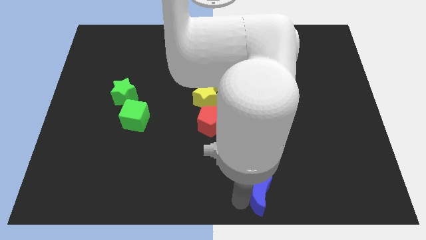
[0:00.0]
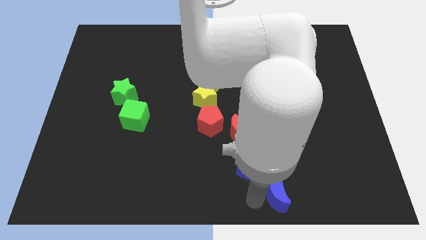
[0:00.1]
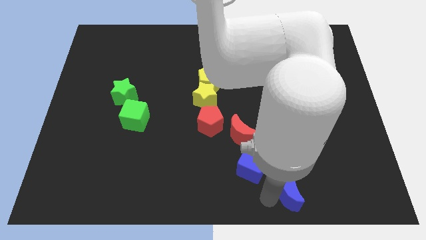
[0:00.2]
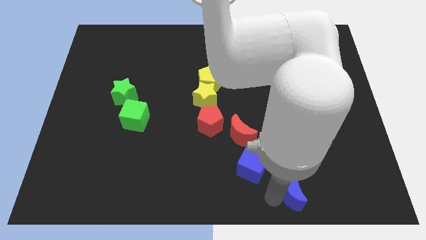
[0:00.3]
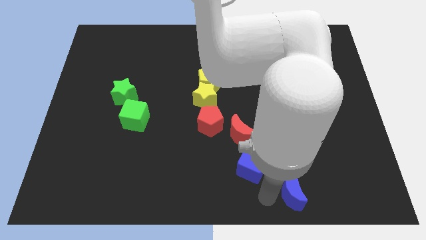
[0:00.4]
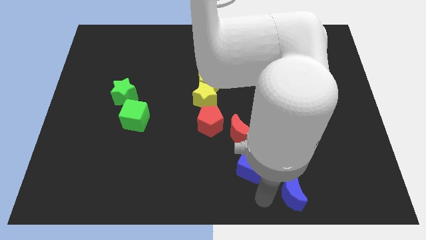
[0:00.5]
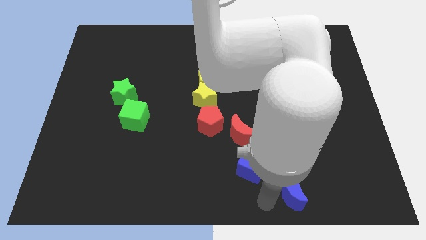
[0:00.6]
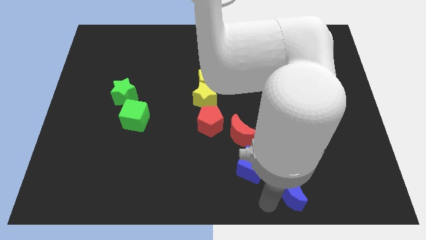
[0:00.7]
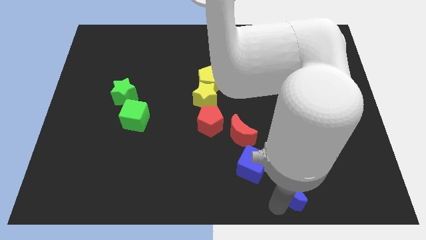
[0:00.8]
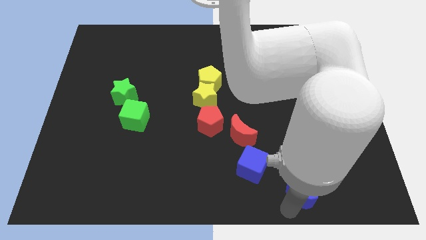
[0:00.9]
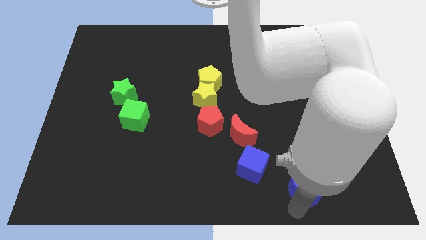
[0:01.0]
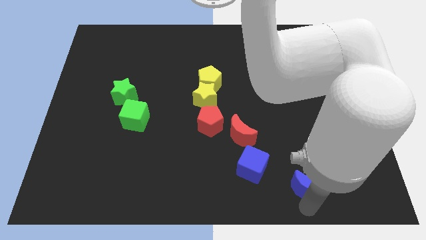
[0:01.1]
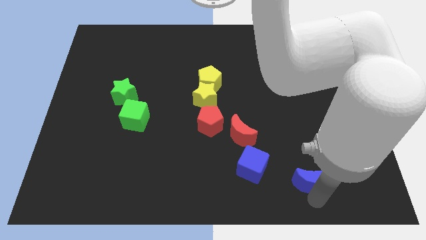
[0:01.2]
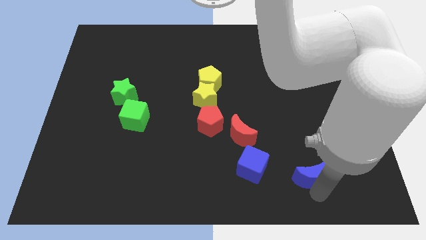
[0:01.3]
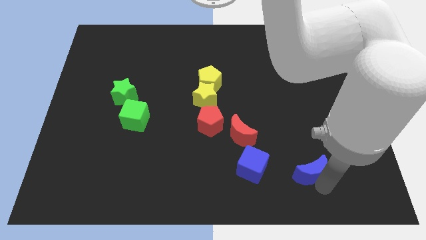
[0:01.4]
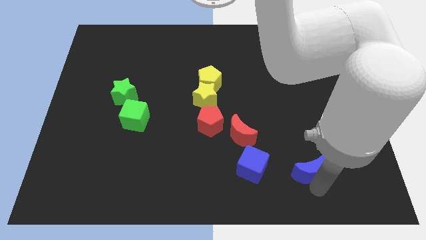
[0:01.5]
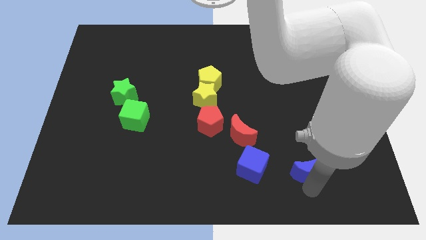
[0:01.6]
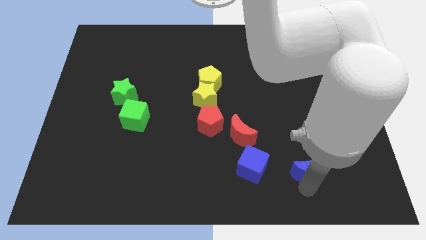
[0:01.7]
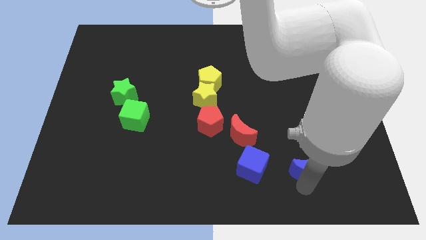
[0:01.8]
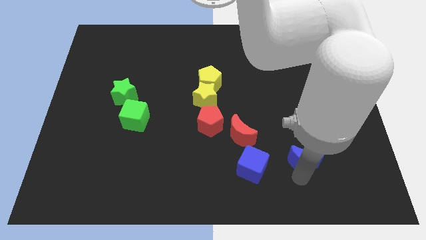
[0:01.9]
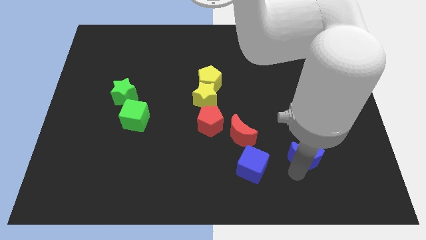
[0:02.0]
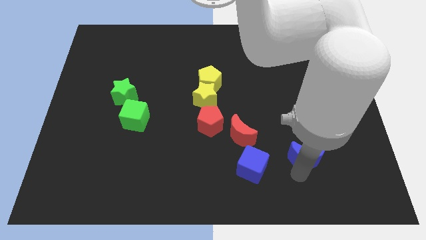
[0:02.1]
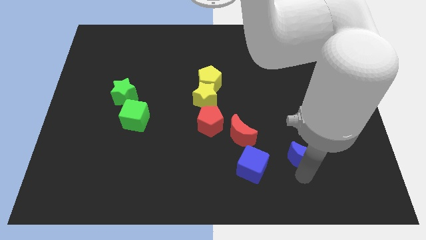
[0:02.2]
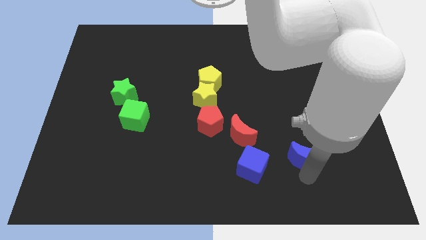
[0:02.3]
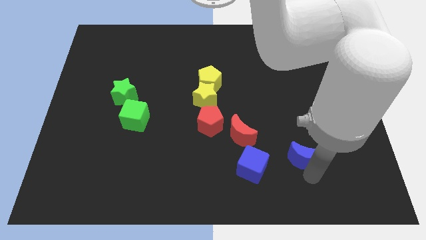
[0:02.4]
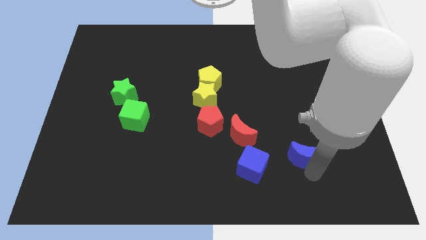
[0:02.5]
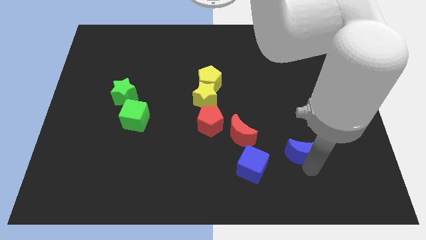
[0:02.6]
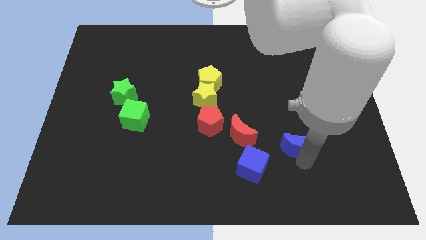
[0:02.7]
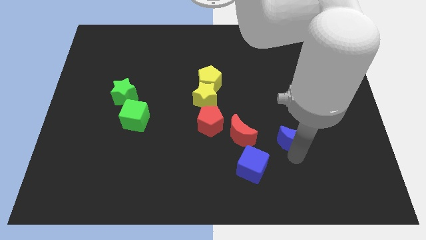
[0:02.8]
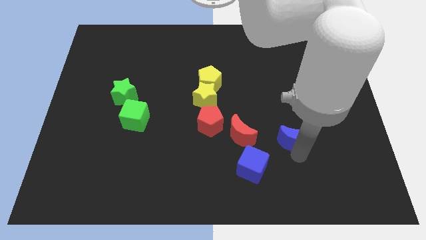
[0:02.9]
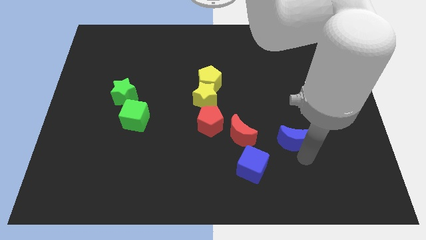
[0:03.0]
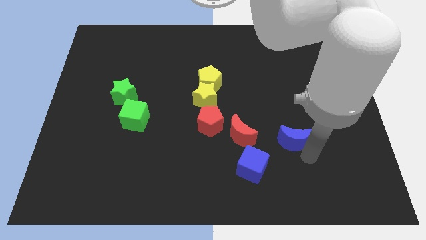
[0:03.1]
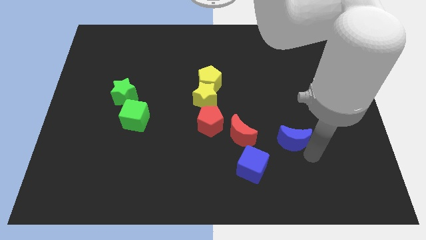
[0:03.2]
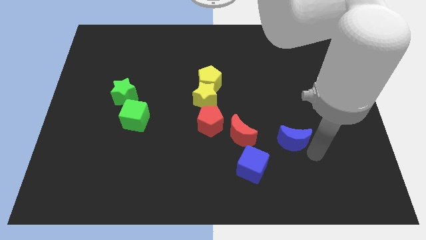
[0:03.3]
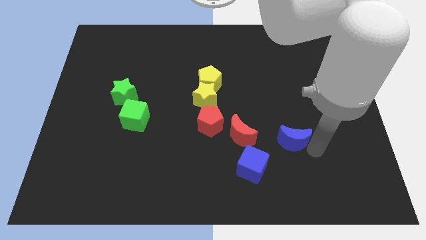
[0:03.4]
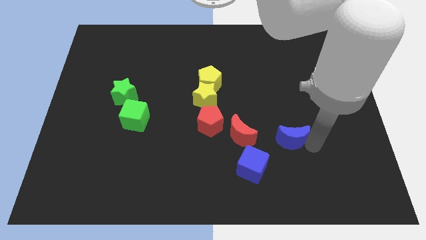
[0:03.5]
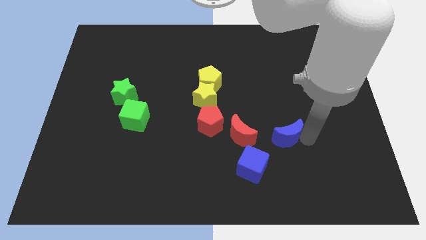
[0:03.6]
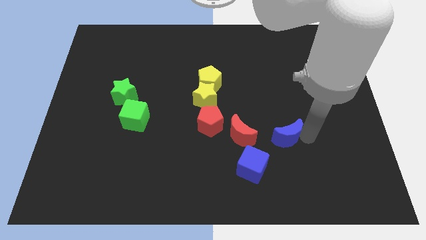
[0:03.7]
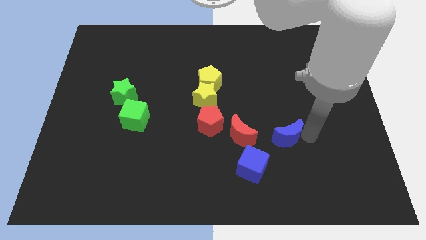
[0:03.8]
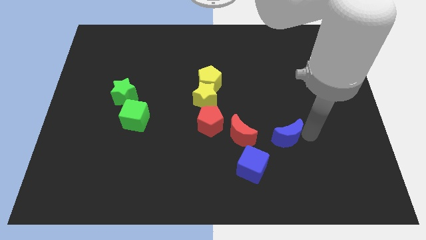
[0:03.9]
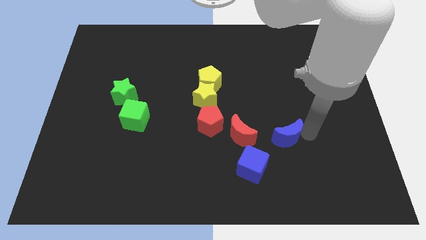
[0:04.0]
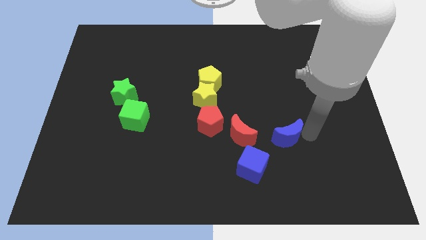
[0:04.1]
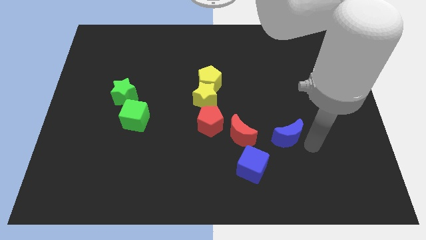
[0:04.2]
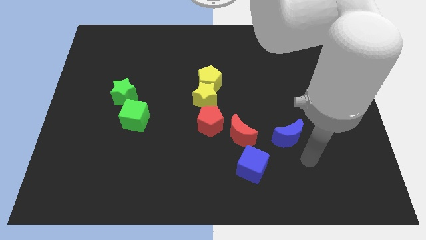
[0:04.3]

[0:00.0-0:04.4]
move the blue moon to the right side of the red crescent

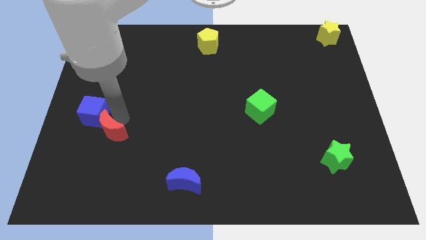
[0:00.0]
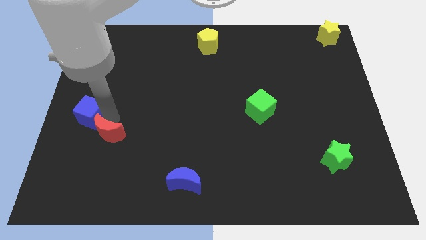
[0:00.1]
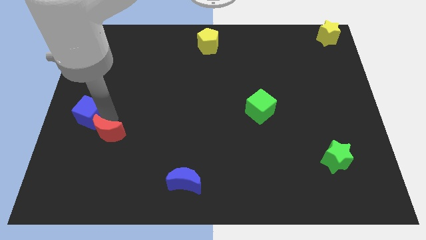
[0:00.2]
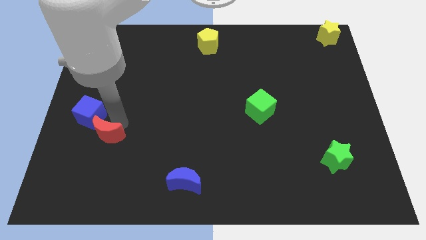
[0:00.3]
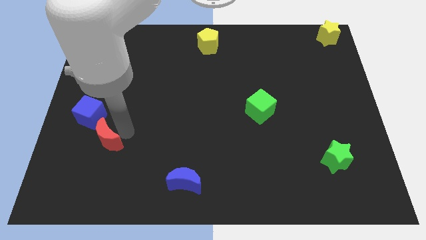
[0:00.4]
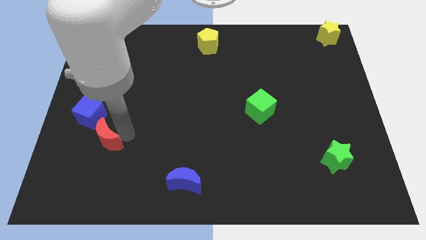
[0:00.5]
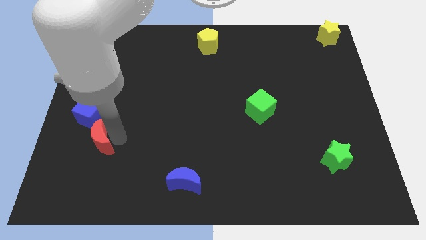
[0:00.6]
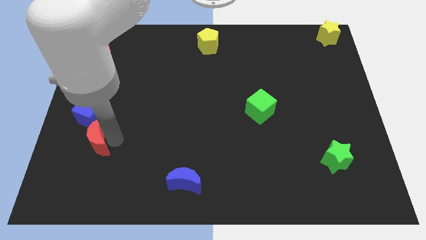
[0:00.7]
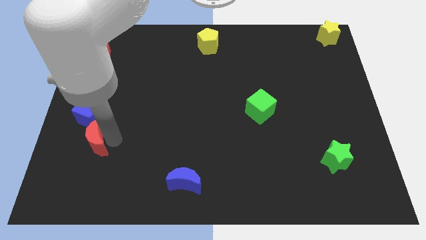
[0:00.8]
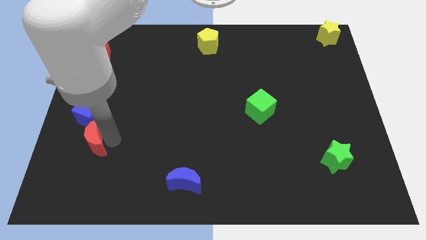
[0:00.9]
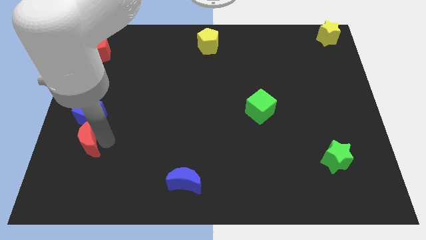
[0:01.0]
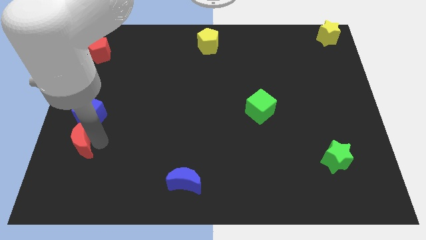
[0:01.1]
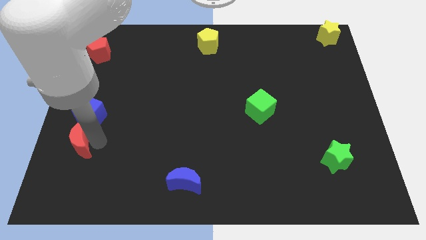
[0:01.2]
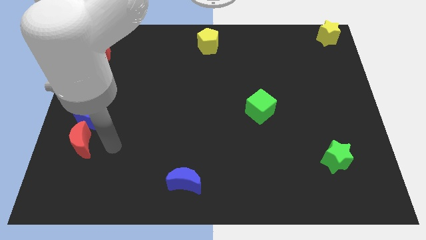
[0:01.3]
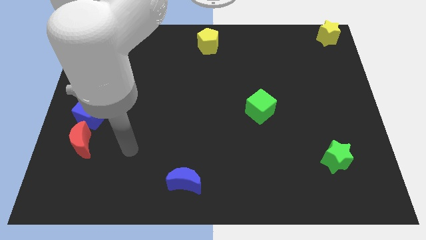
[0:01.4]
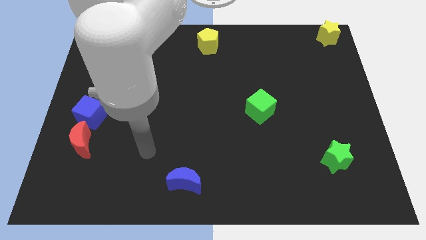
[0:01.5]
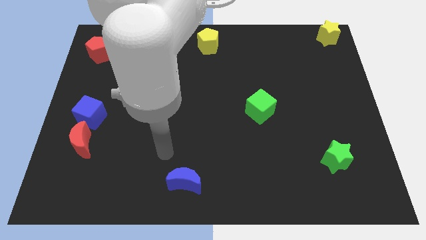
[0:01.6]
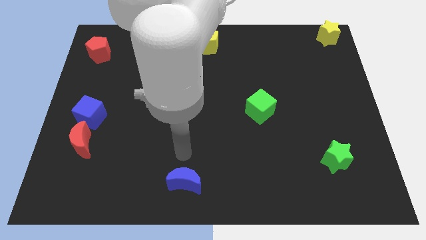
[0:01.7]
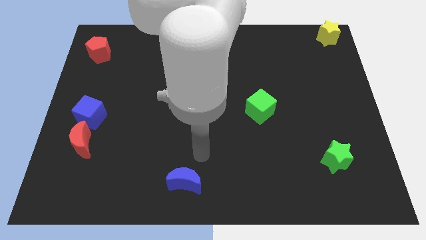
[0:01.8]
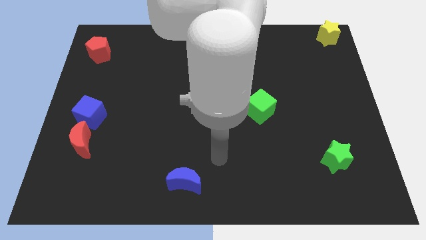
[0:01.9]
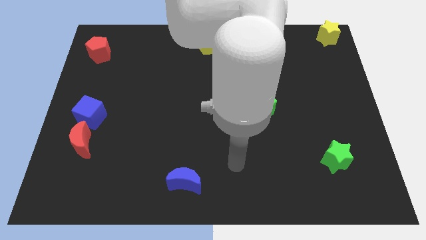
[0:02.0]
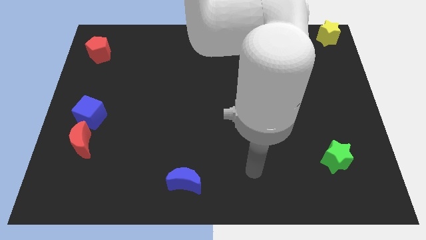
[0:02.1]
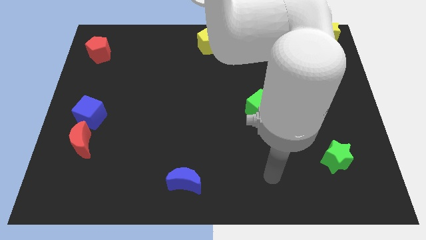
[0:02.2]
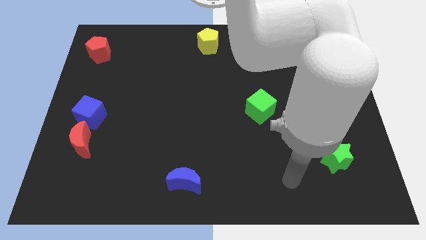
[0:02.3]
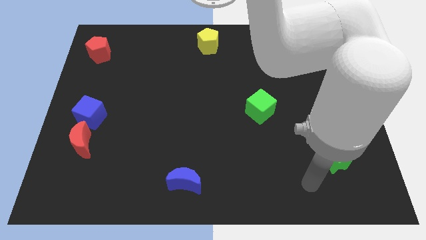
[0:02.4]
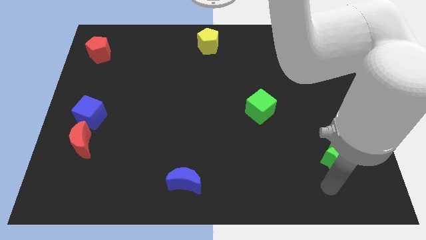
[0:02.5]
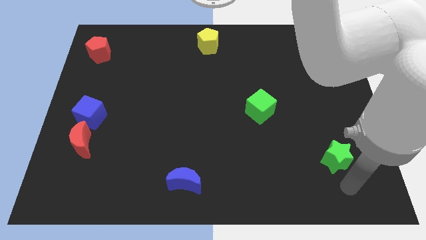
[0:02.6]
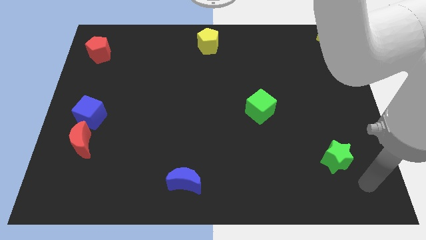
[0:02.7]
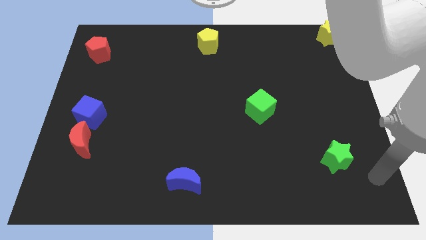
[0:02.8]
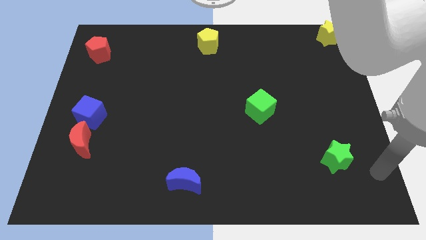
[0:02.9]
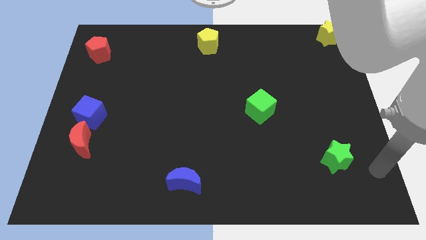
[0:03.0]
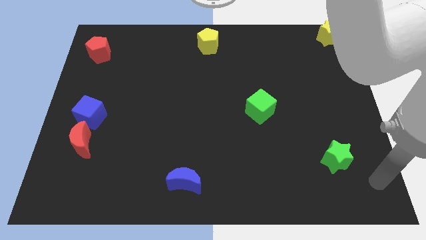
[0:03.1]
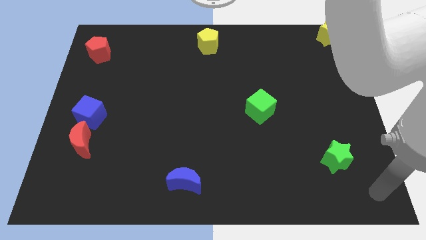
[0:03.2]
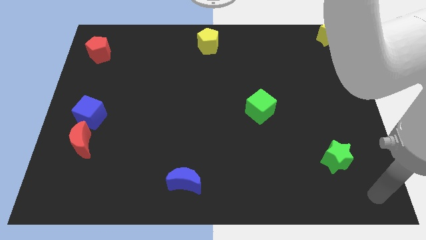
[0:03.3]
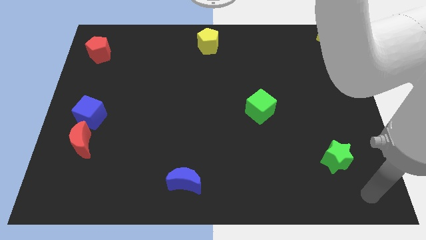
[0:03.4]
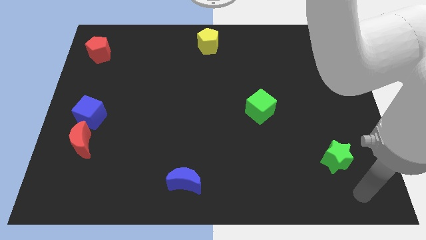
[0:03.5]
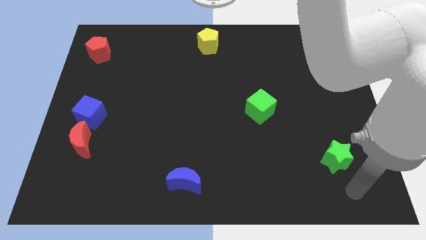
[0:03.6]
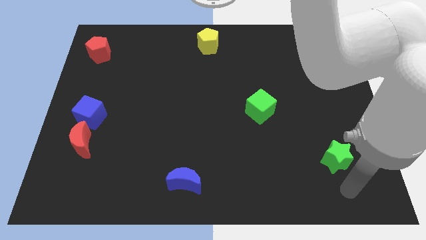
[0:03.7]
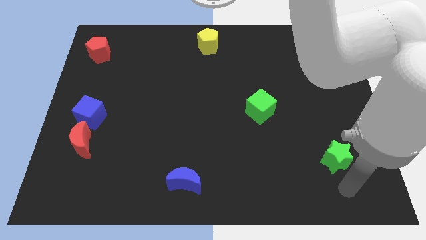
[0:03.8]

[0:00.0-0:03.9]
move your arm away from the red moon

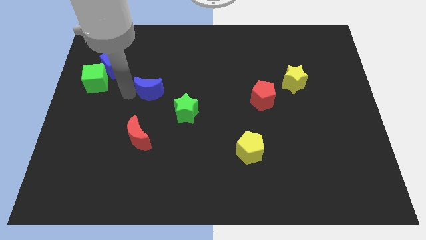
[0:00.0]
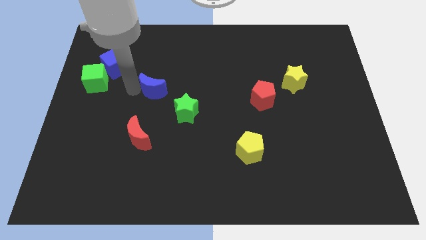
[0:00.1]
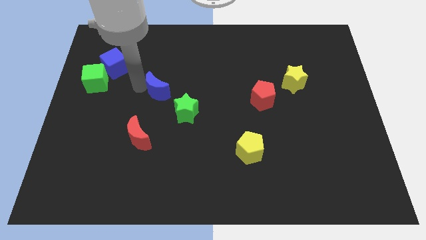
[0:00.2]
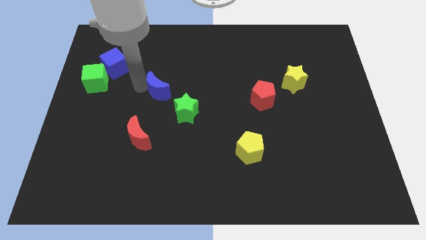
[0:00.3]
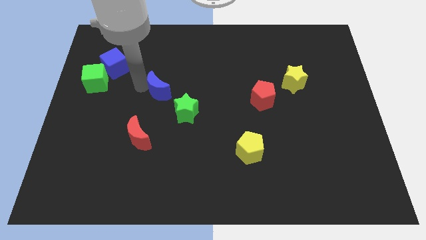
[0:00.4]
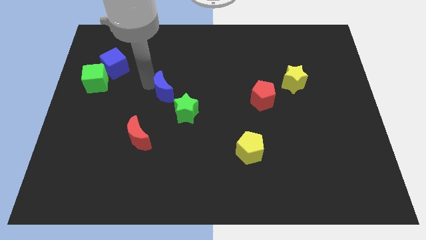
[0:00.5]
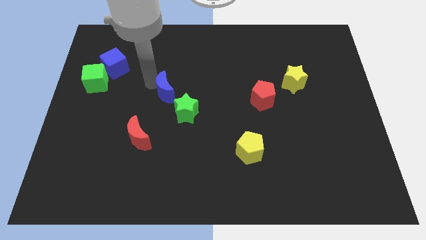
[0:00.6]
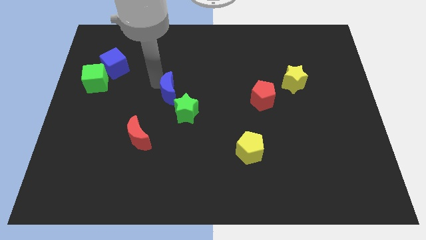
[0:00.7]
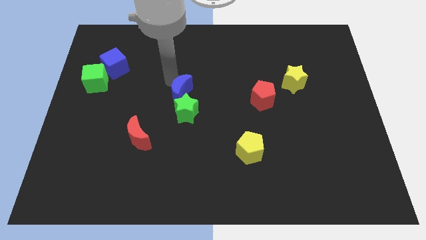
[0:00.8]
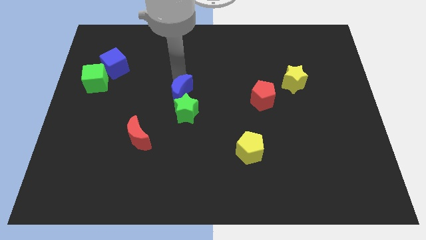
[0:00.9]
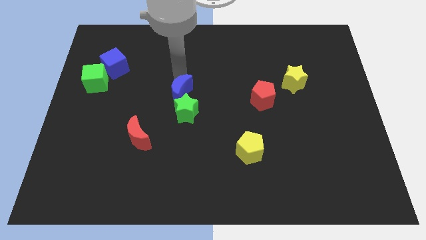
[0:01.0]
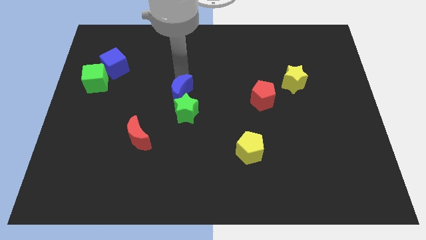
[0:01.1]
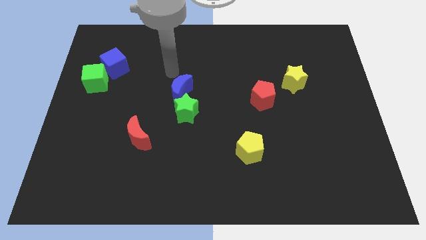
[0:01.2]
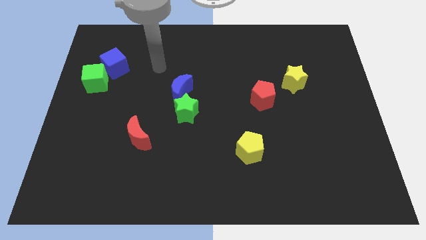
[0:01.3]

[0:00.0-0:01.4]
push the blue moon at the top of the green star
